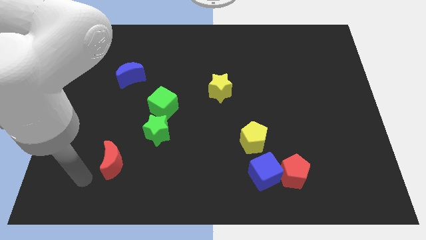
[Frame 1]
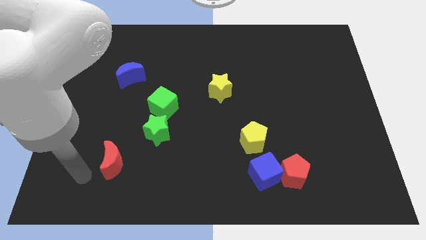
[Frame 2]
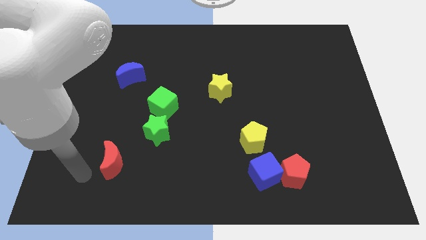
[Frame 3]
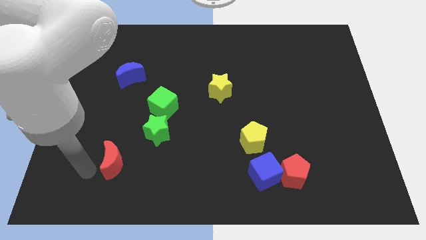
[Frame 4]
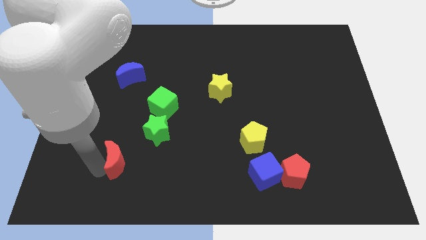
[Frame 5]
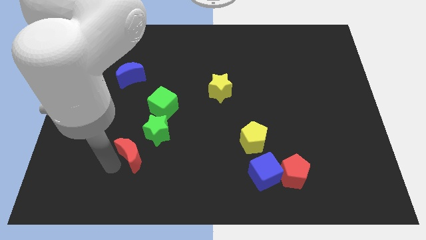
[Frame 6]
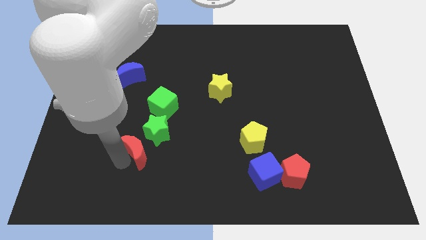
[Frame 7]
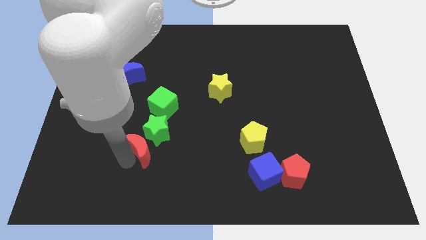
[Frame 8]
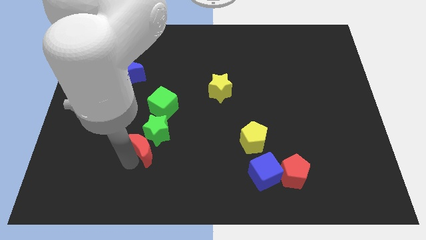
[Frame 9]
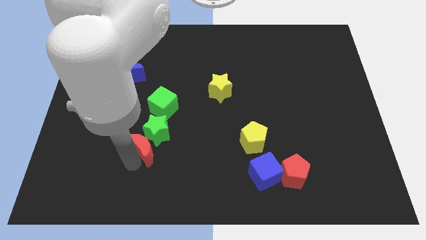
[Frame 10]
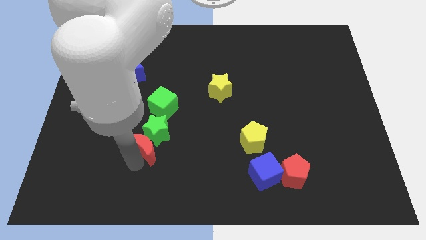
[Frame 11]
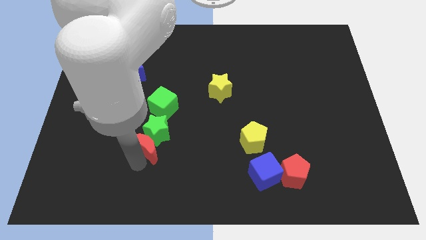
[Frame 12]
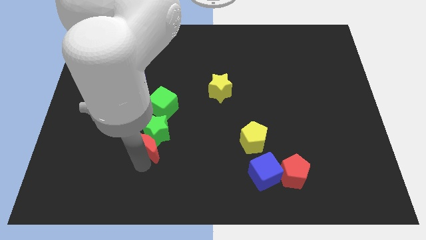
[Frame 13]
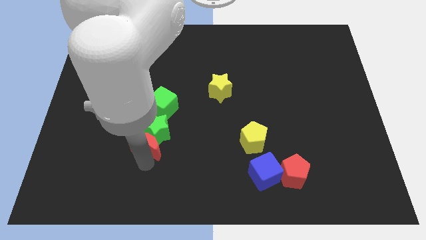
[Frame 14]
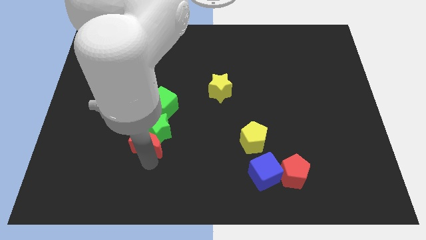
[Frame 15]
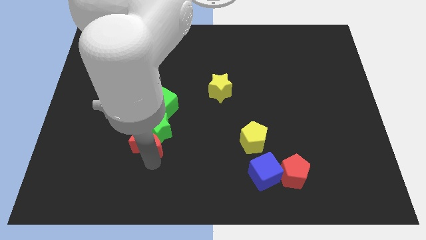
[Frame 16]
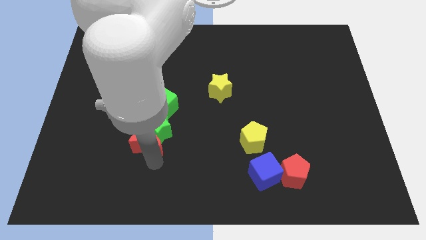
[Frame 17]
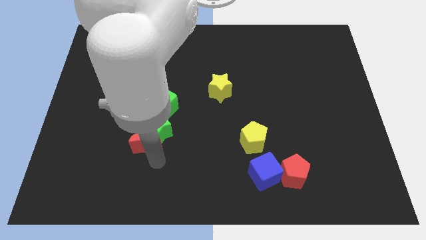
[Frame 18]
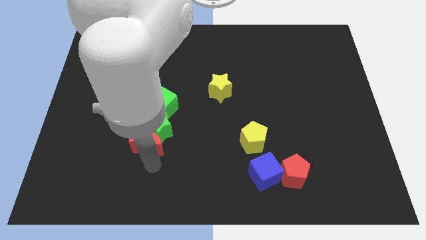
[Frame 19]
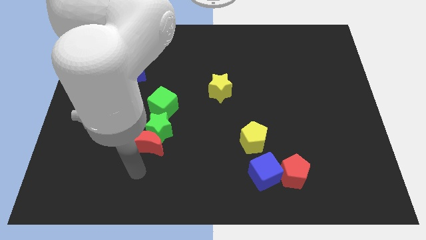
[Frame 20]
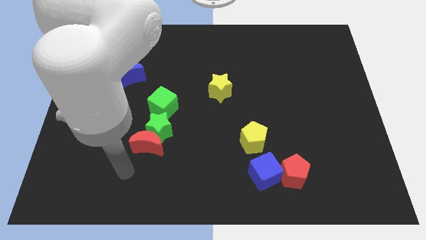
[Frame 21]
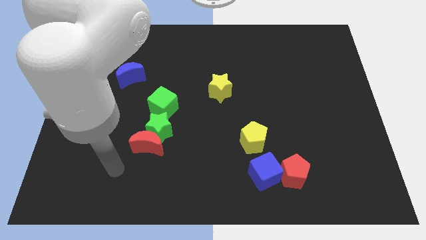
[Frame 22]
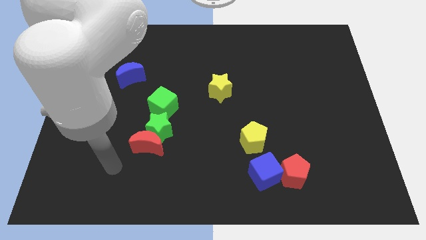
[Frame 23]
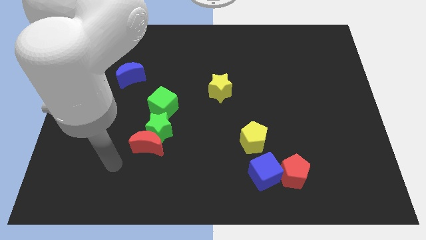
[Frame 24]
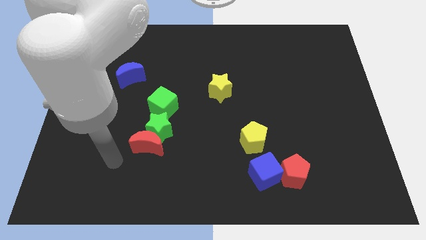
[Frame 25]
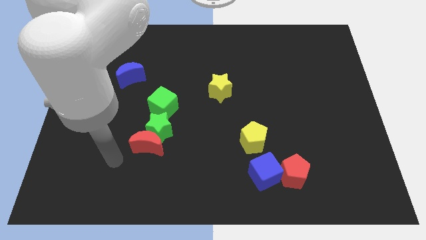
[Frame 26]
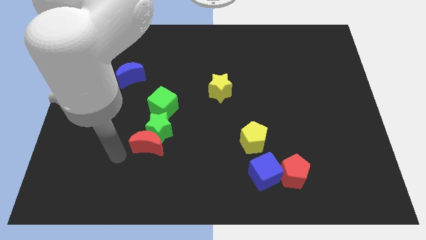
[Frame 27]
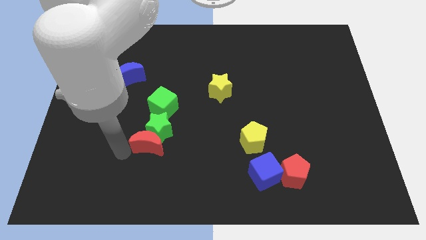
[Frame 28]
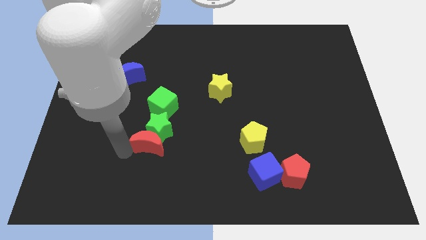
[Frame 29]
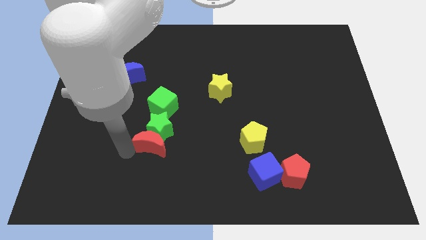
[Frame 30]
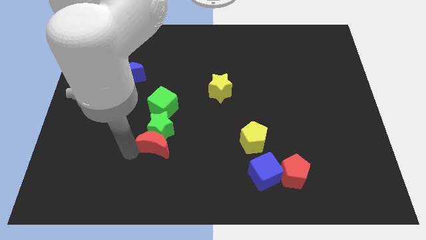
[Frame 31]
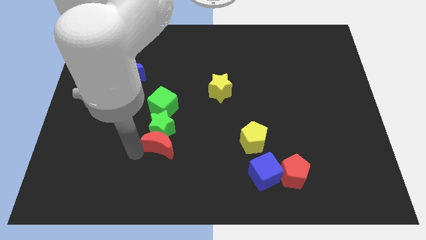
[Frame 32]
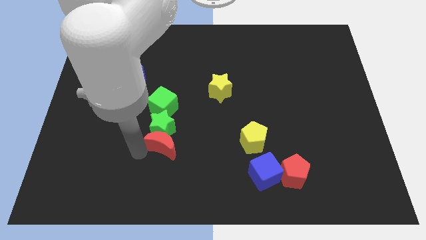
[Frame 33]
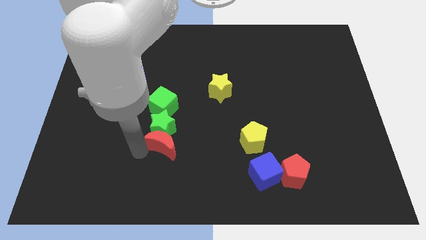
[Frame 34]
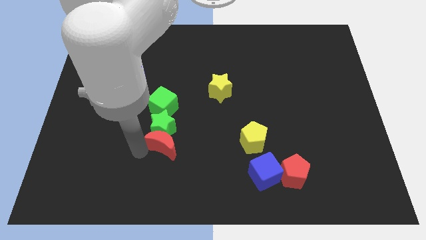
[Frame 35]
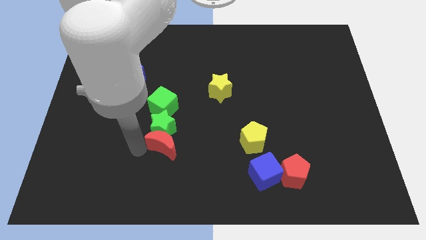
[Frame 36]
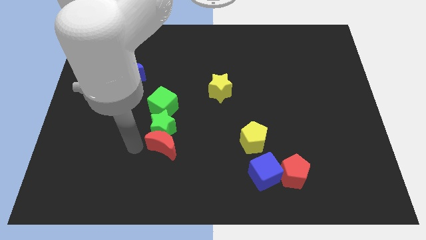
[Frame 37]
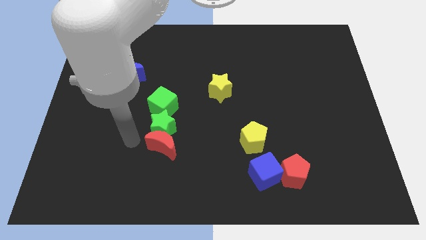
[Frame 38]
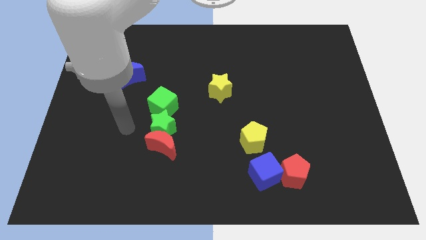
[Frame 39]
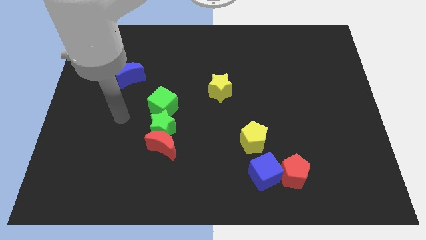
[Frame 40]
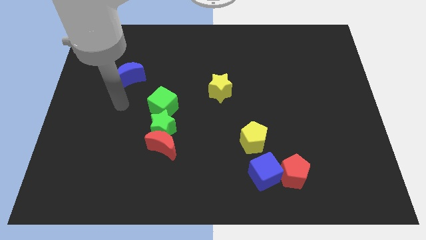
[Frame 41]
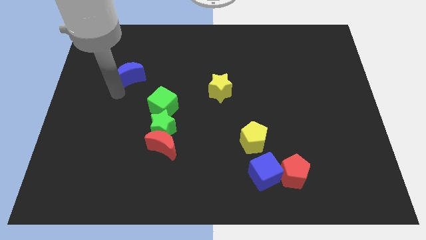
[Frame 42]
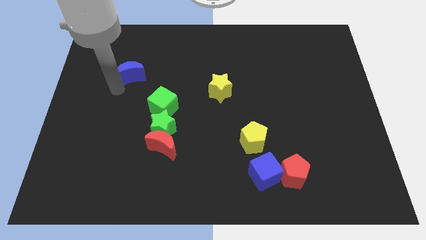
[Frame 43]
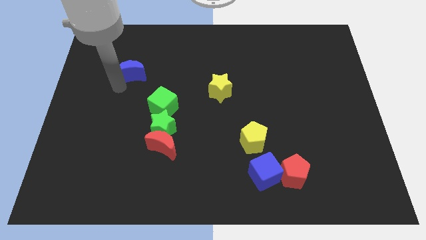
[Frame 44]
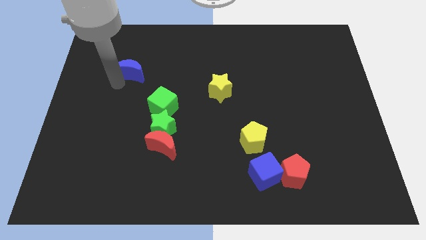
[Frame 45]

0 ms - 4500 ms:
push the red crescent into the green star

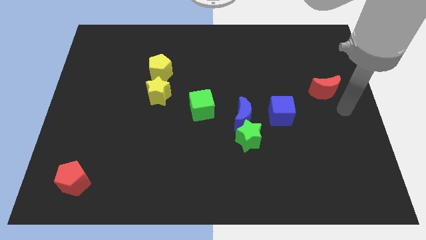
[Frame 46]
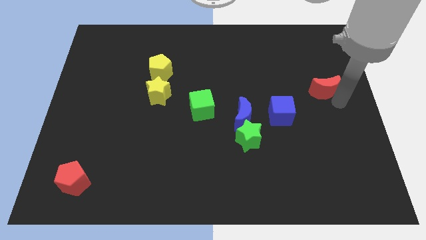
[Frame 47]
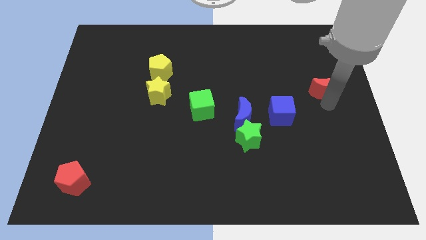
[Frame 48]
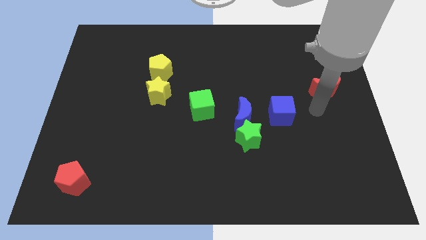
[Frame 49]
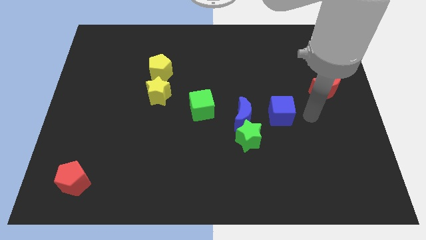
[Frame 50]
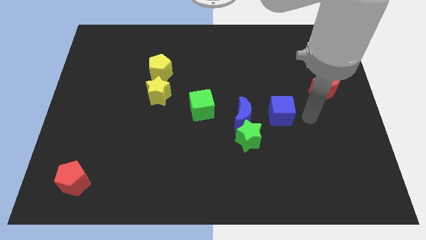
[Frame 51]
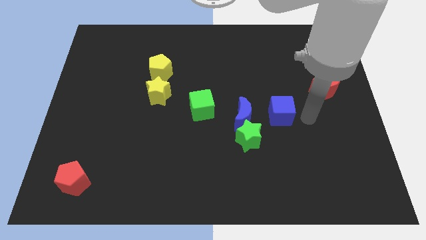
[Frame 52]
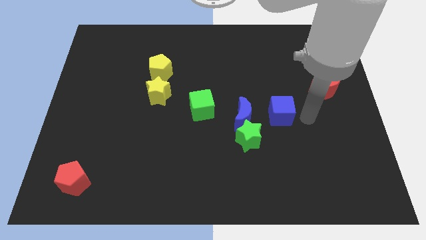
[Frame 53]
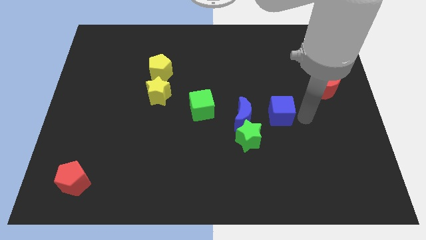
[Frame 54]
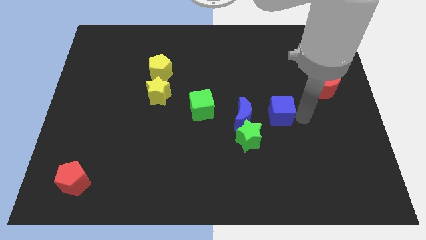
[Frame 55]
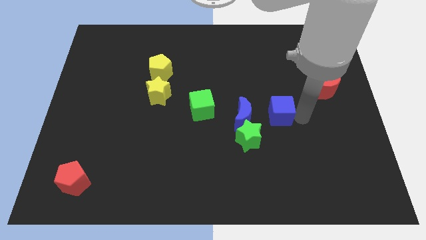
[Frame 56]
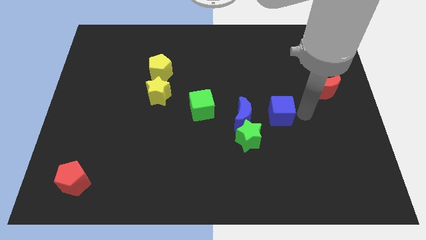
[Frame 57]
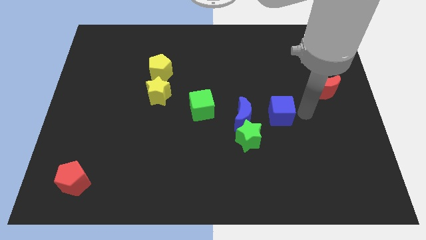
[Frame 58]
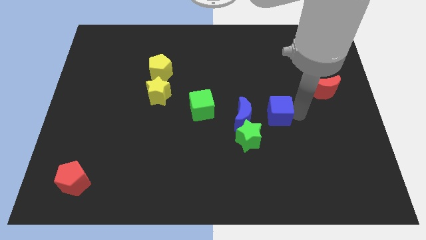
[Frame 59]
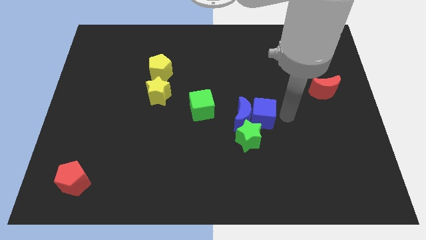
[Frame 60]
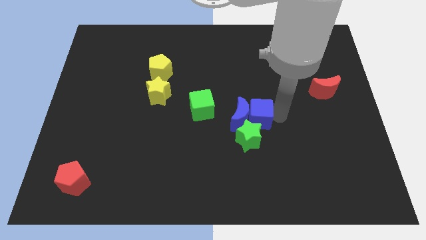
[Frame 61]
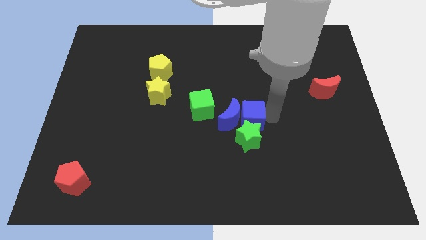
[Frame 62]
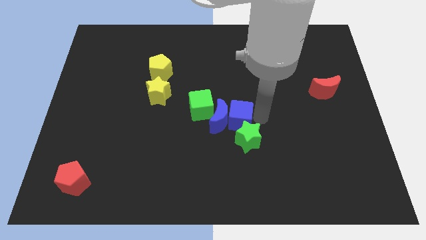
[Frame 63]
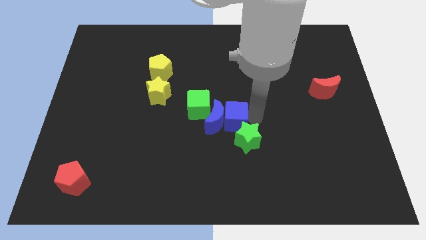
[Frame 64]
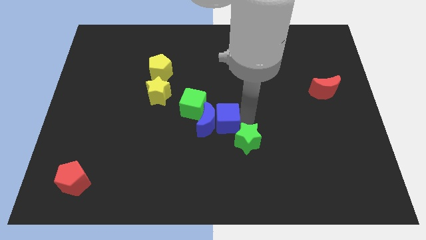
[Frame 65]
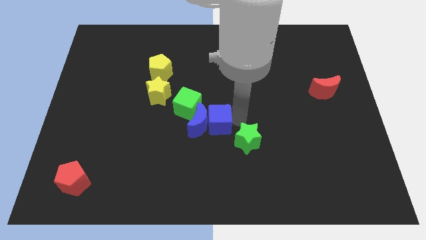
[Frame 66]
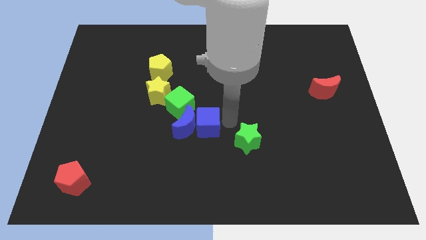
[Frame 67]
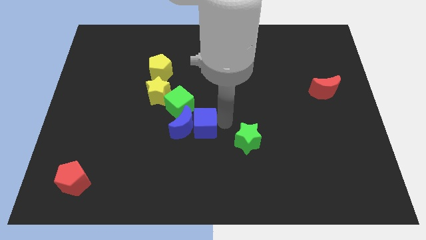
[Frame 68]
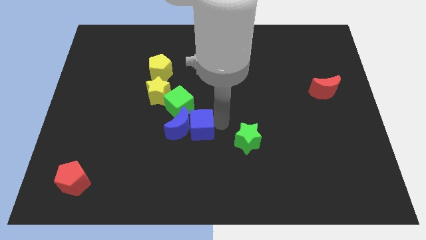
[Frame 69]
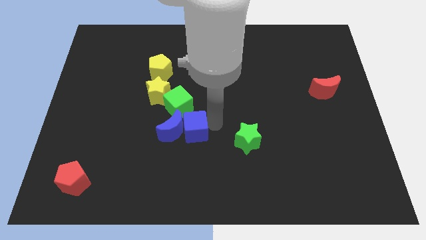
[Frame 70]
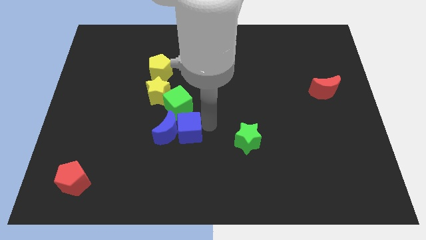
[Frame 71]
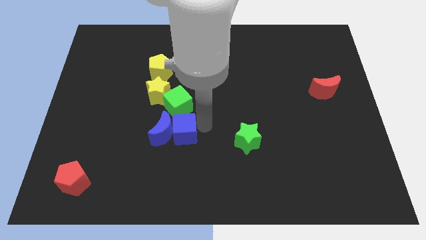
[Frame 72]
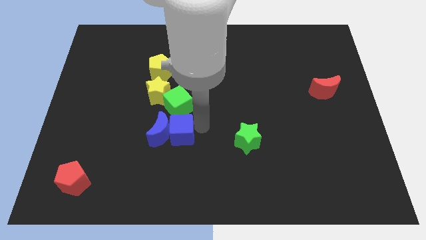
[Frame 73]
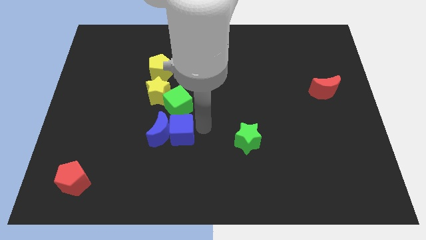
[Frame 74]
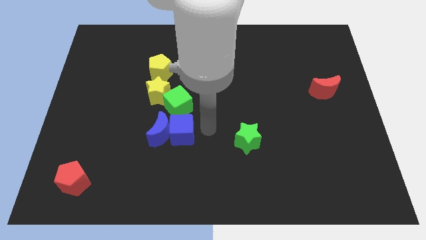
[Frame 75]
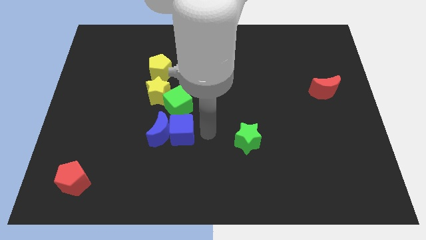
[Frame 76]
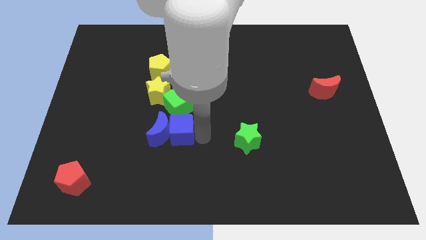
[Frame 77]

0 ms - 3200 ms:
move the blue cube and blue crescent to the center of the board

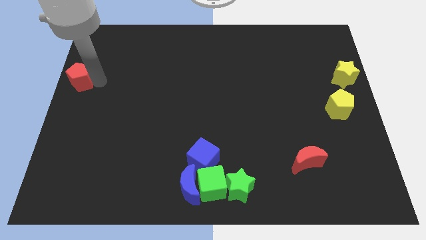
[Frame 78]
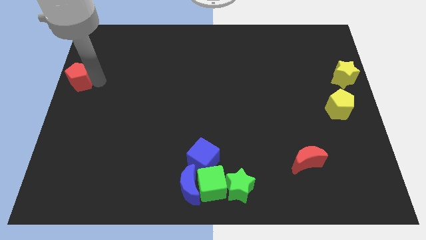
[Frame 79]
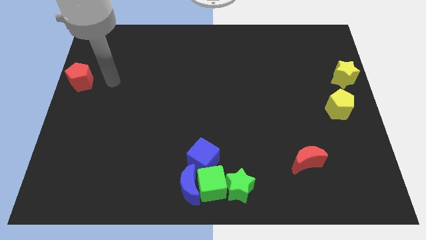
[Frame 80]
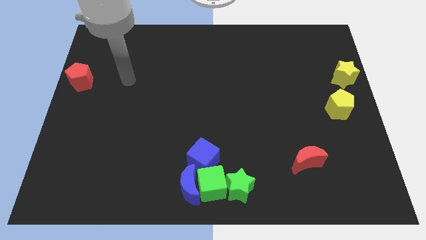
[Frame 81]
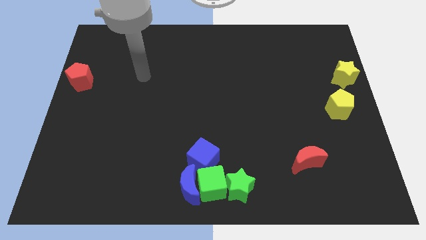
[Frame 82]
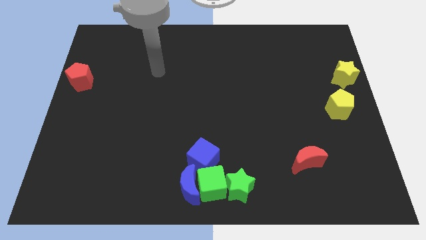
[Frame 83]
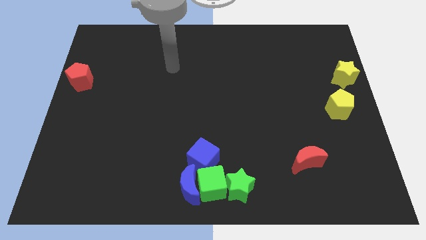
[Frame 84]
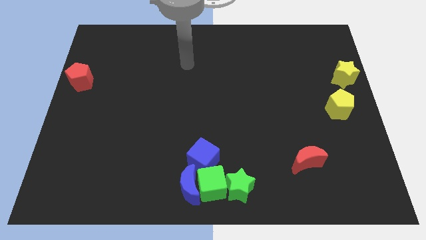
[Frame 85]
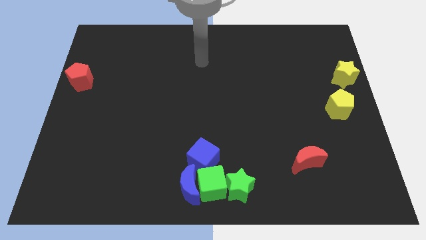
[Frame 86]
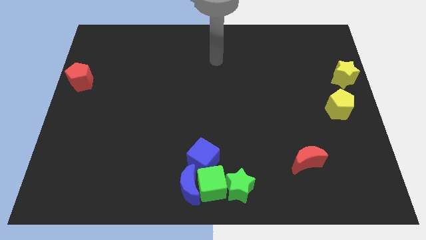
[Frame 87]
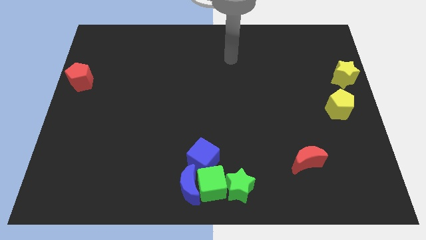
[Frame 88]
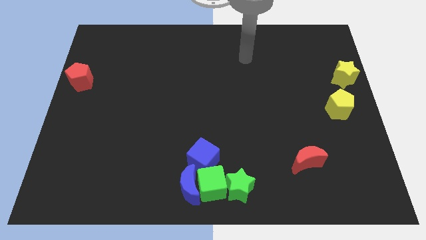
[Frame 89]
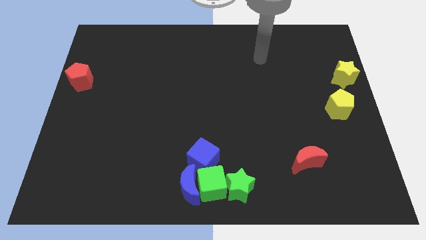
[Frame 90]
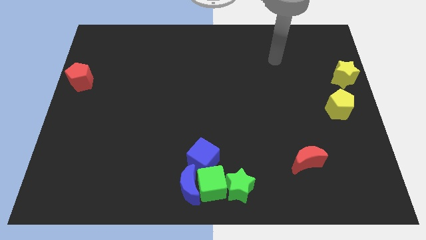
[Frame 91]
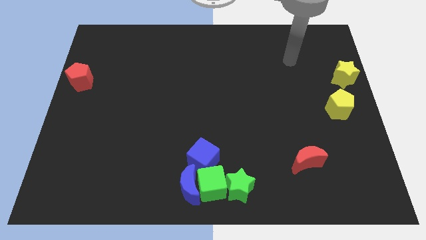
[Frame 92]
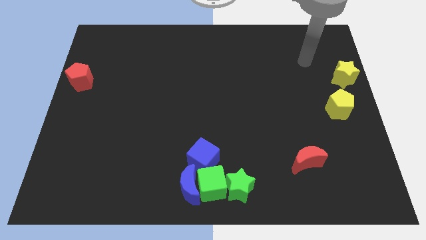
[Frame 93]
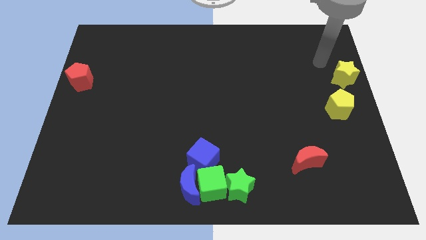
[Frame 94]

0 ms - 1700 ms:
move your arm away from the red pentagon
